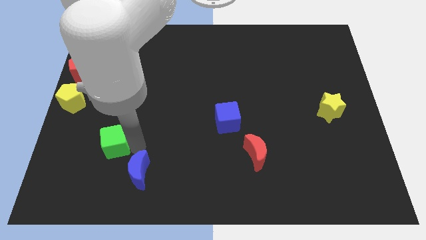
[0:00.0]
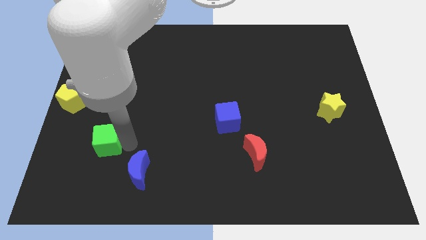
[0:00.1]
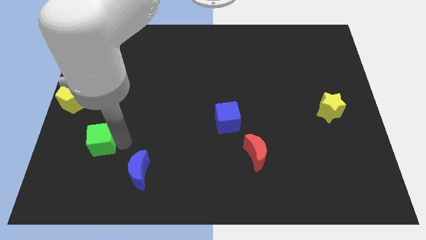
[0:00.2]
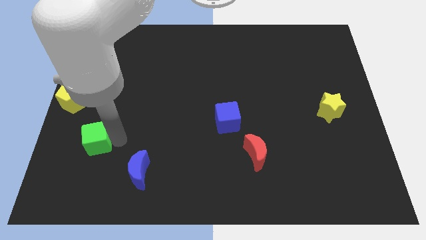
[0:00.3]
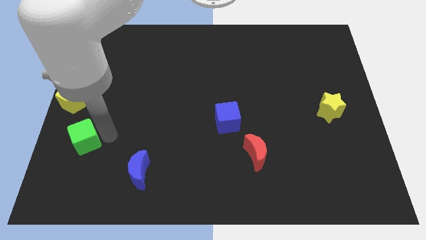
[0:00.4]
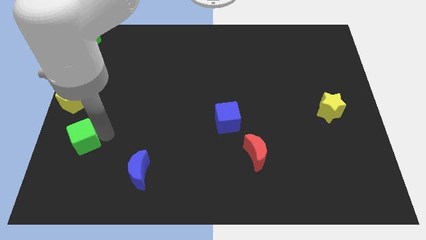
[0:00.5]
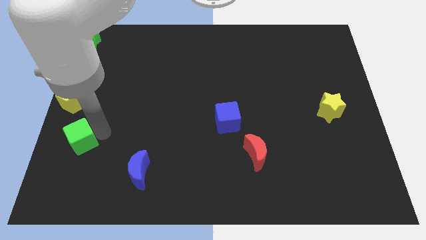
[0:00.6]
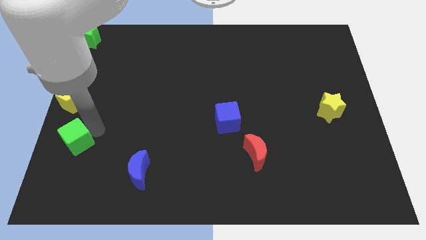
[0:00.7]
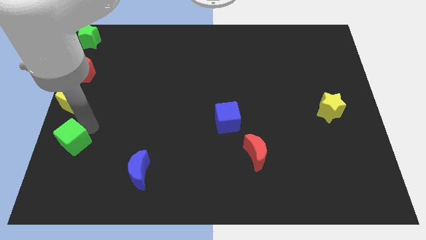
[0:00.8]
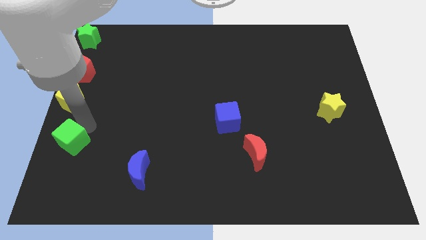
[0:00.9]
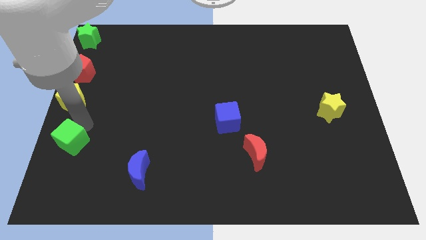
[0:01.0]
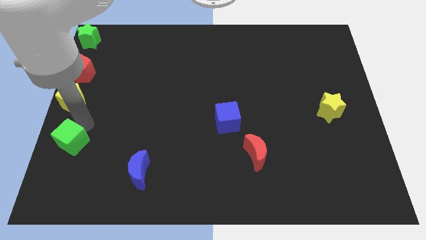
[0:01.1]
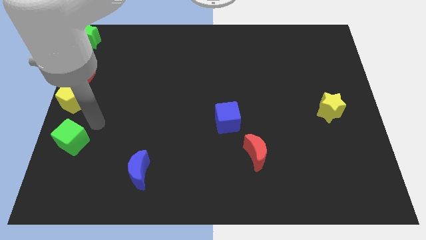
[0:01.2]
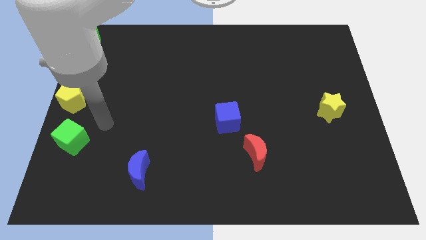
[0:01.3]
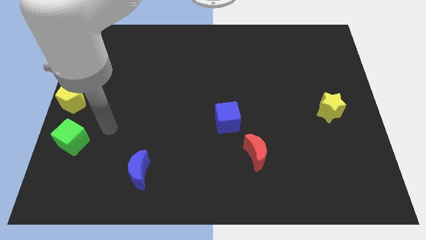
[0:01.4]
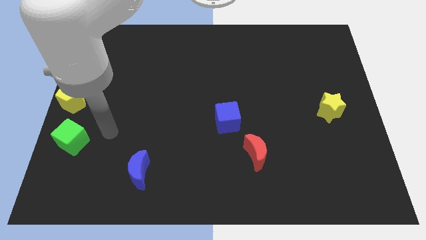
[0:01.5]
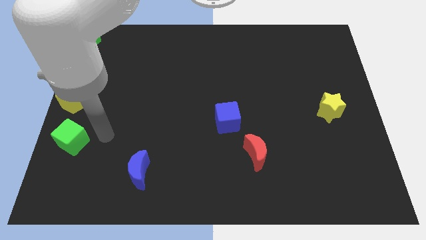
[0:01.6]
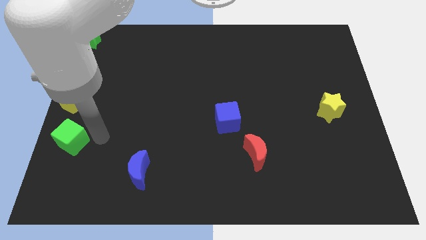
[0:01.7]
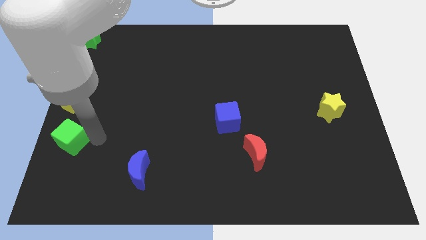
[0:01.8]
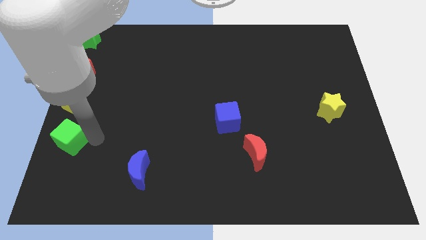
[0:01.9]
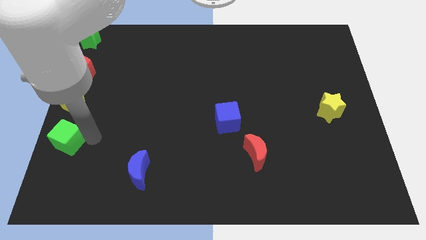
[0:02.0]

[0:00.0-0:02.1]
place the green cube underneath the yellow pentagon

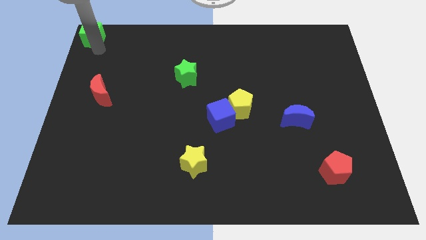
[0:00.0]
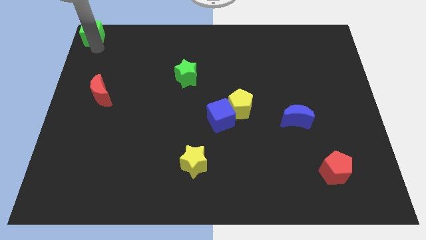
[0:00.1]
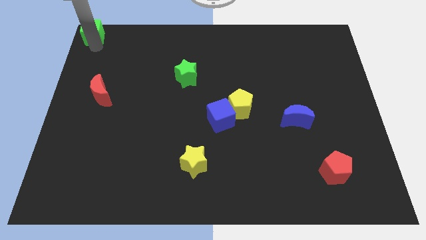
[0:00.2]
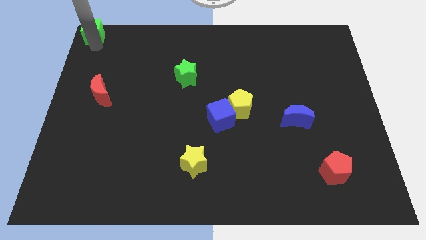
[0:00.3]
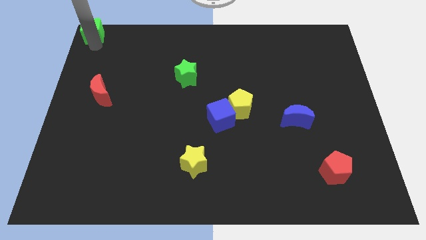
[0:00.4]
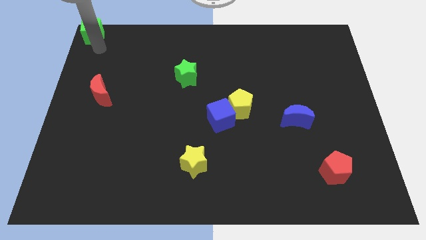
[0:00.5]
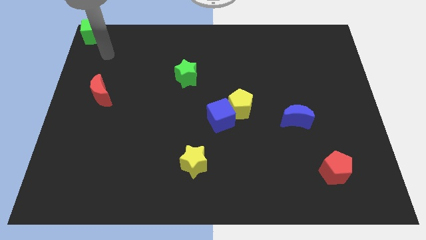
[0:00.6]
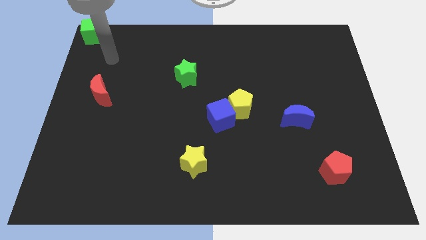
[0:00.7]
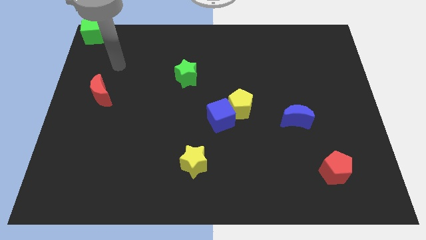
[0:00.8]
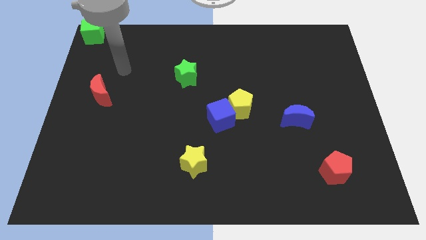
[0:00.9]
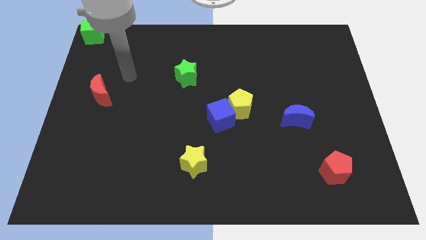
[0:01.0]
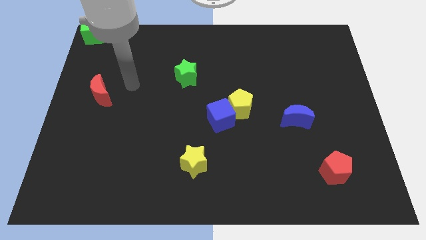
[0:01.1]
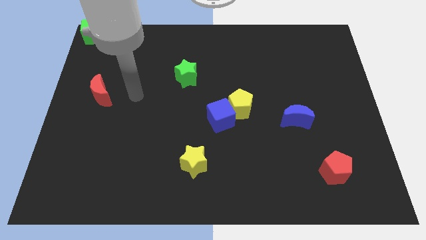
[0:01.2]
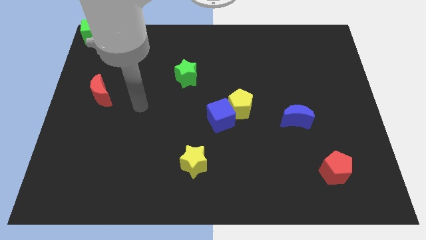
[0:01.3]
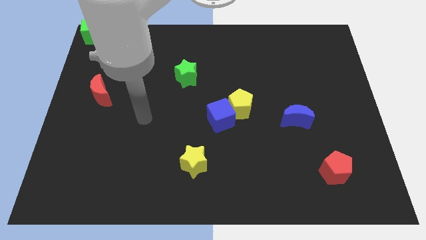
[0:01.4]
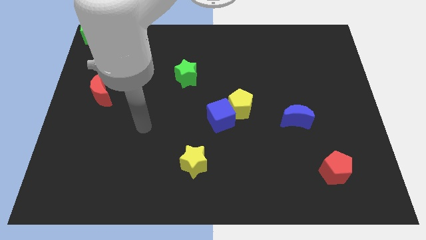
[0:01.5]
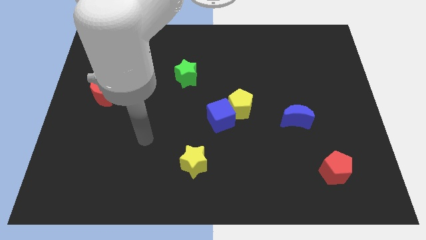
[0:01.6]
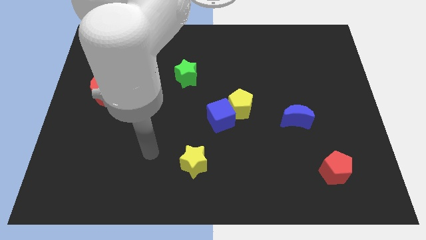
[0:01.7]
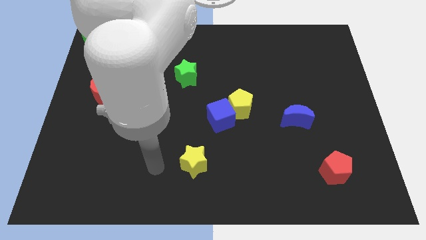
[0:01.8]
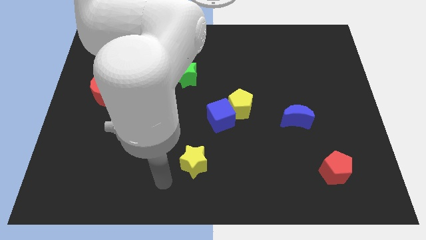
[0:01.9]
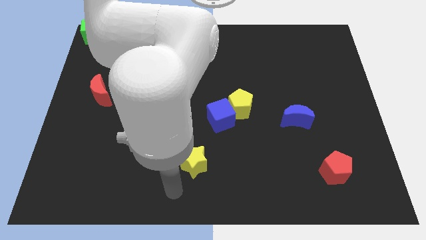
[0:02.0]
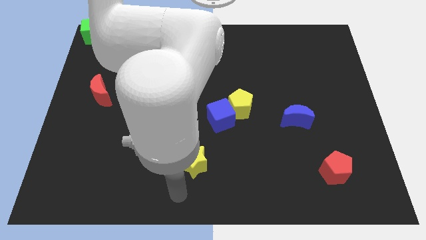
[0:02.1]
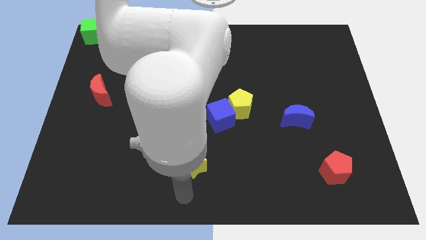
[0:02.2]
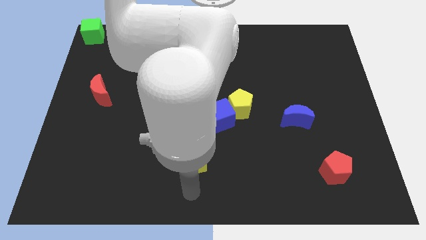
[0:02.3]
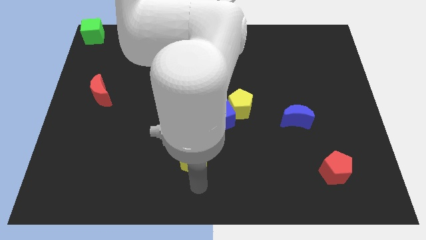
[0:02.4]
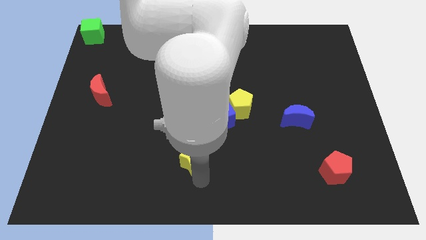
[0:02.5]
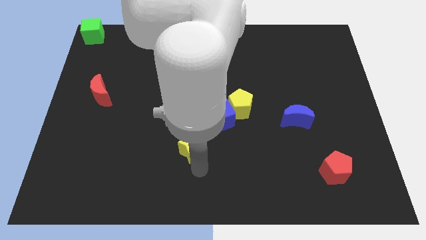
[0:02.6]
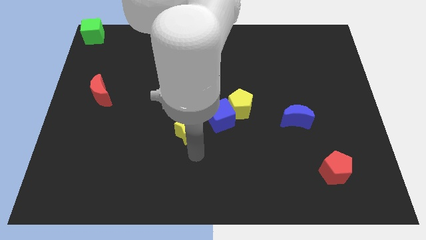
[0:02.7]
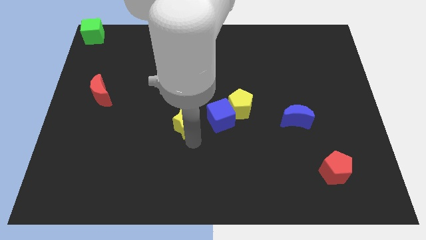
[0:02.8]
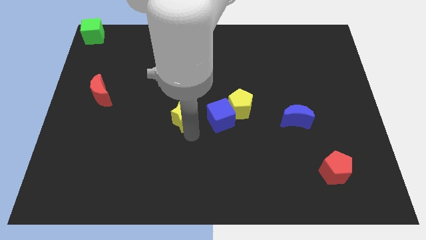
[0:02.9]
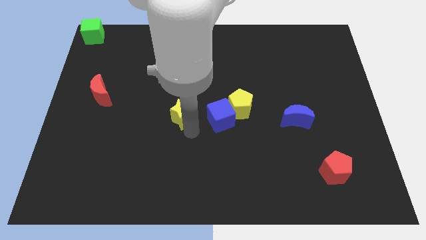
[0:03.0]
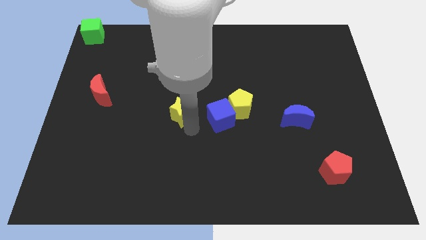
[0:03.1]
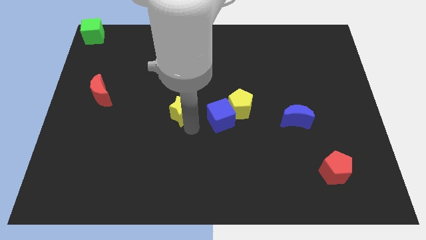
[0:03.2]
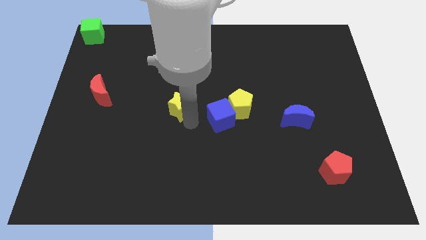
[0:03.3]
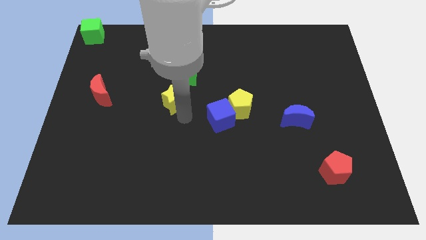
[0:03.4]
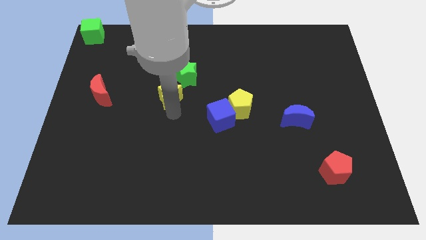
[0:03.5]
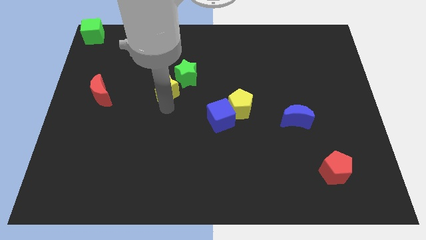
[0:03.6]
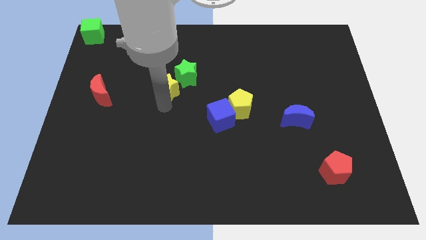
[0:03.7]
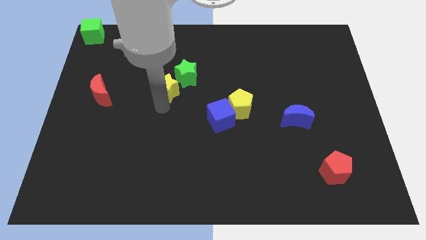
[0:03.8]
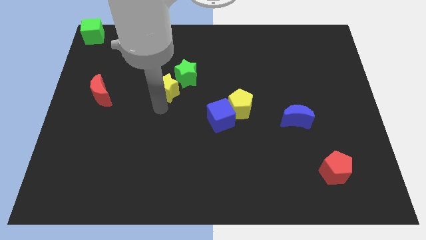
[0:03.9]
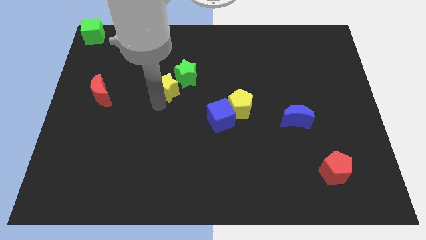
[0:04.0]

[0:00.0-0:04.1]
move the yellow star diagonally left to the green star

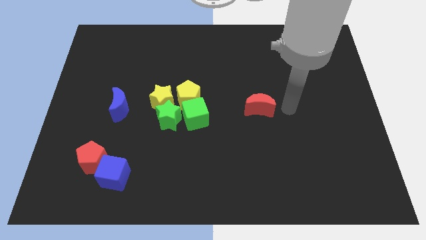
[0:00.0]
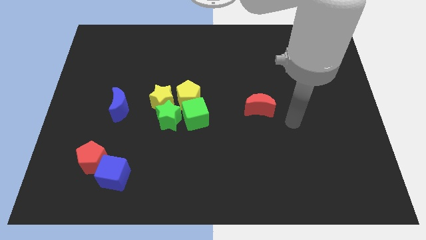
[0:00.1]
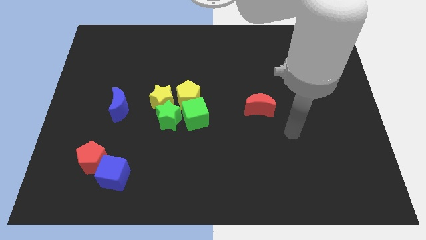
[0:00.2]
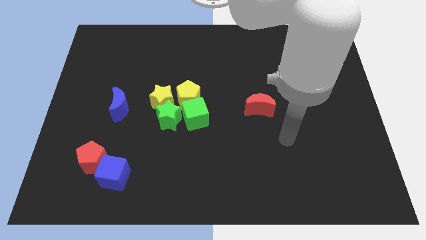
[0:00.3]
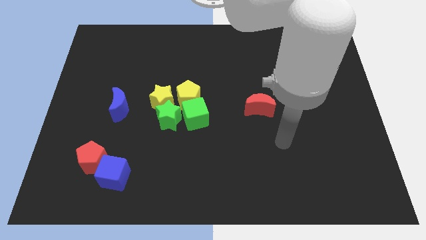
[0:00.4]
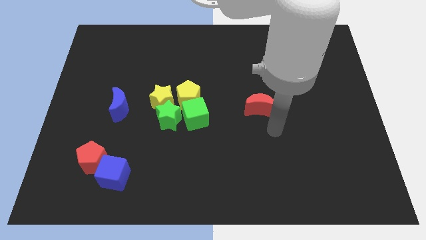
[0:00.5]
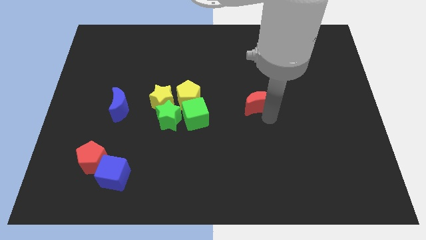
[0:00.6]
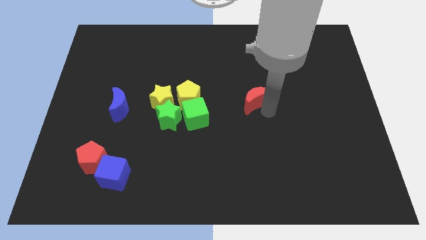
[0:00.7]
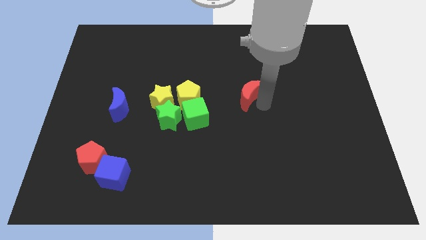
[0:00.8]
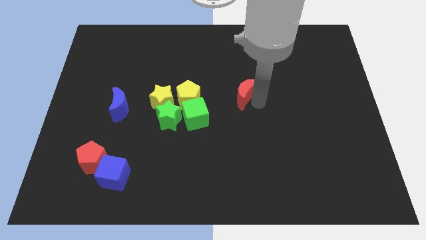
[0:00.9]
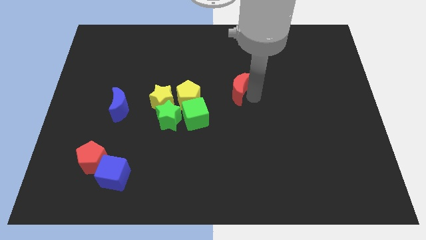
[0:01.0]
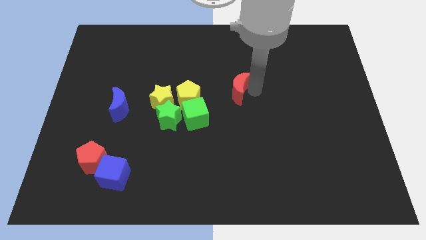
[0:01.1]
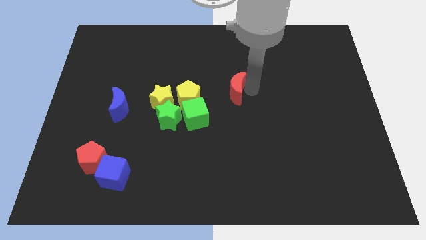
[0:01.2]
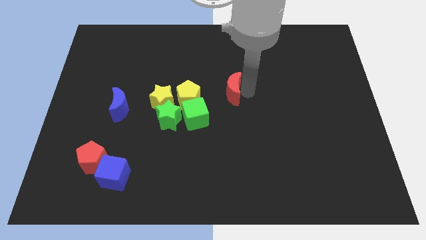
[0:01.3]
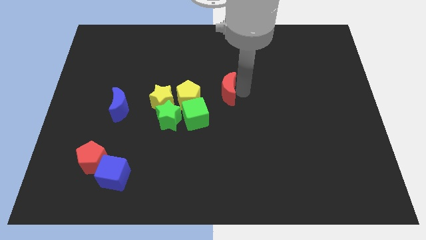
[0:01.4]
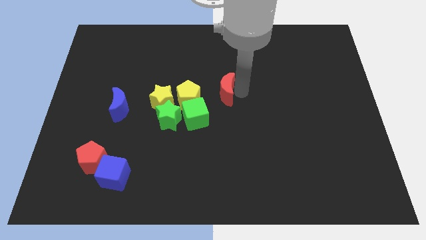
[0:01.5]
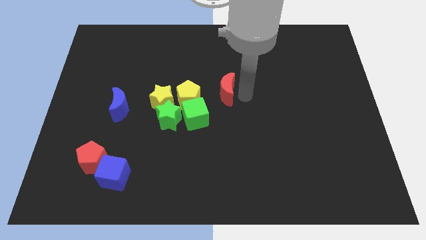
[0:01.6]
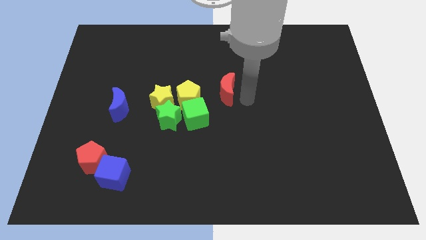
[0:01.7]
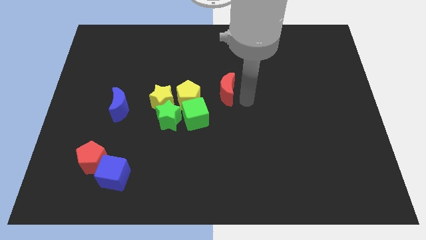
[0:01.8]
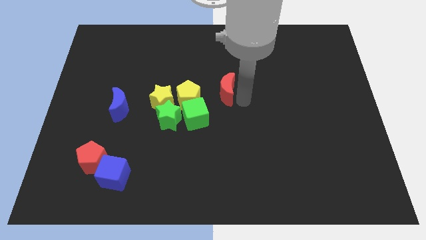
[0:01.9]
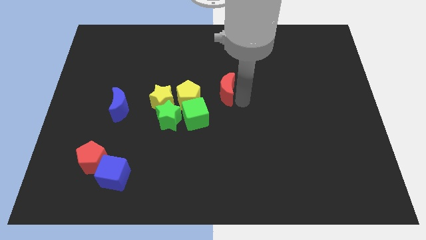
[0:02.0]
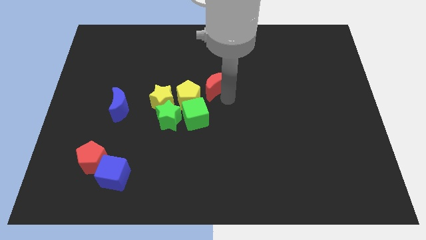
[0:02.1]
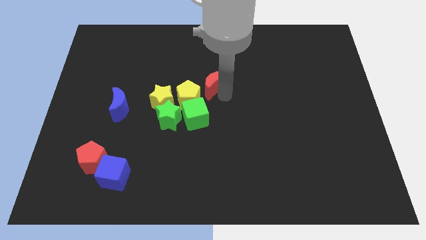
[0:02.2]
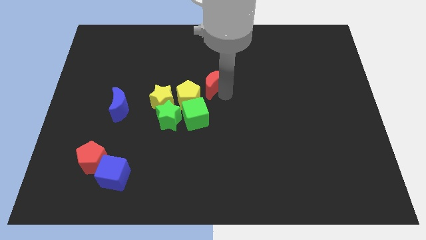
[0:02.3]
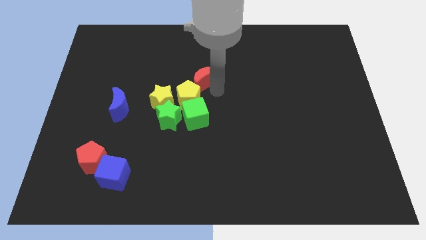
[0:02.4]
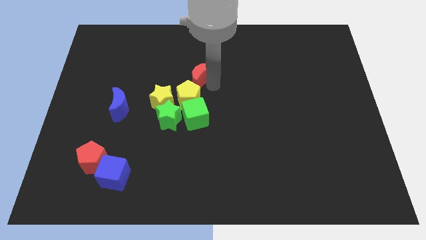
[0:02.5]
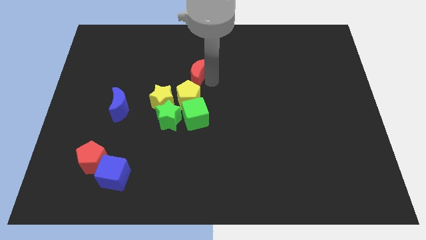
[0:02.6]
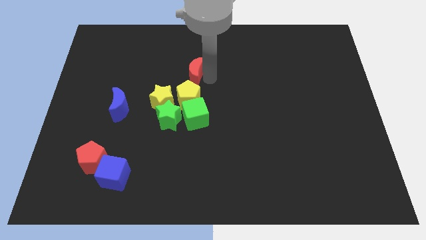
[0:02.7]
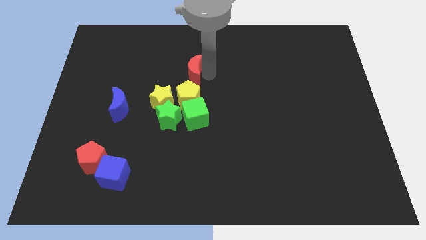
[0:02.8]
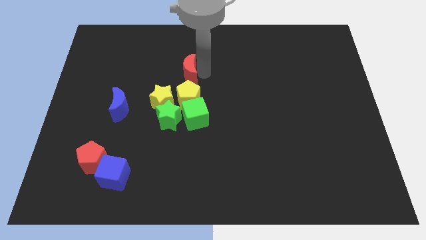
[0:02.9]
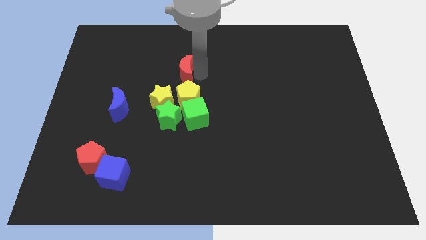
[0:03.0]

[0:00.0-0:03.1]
slide red crescent on top of yellow pentagon
